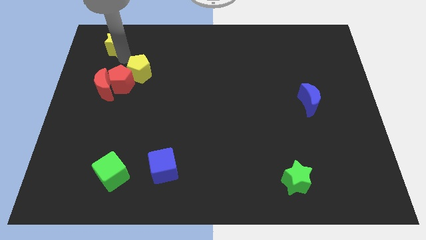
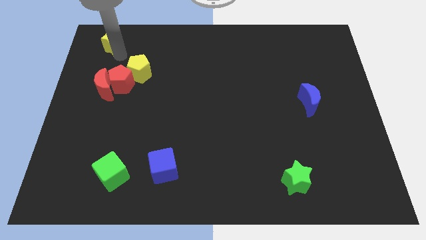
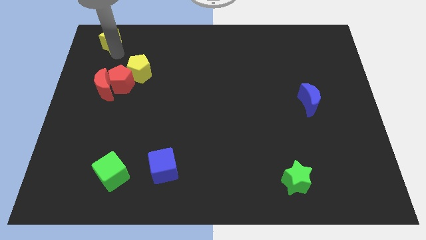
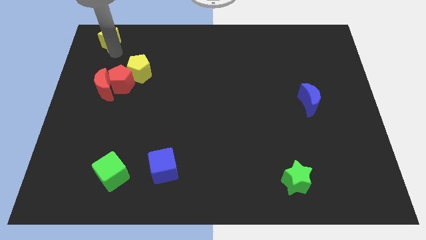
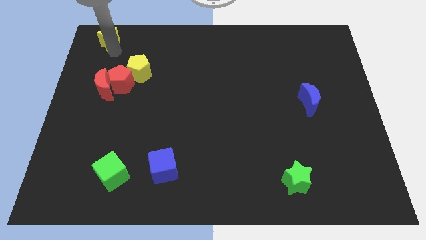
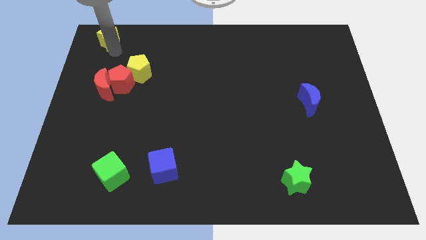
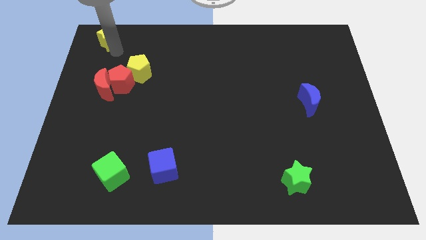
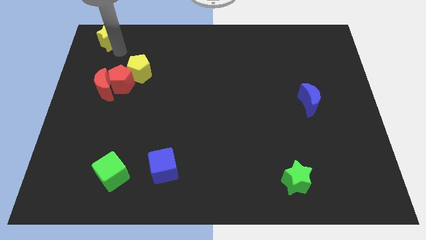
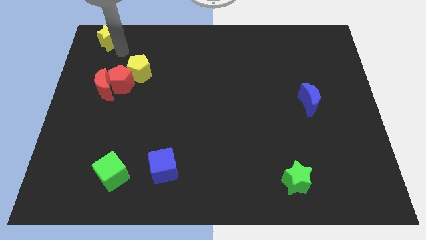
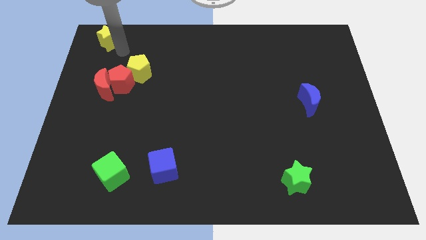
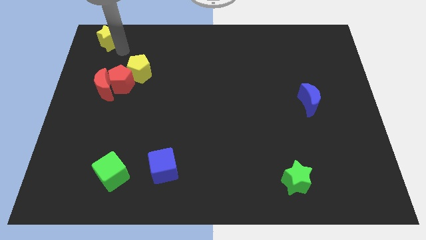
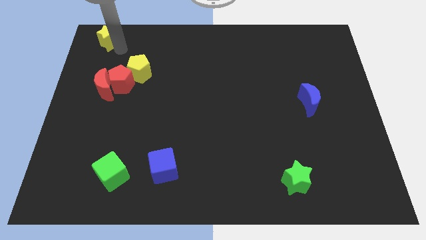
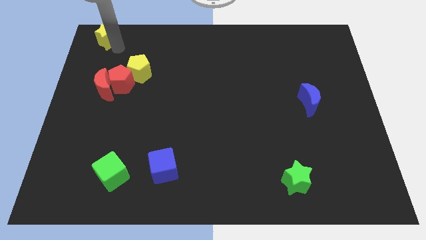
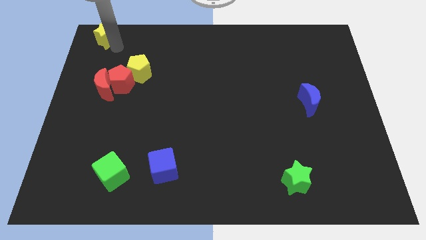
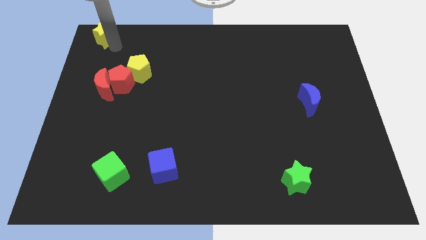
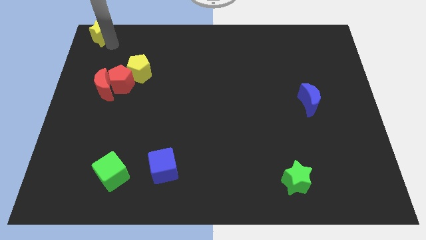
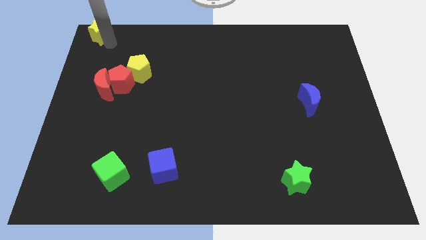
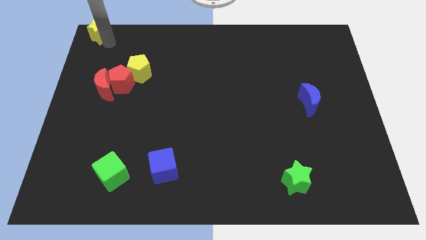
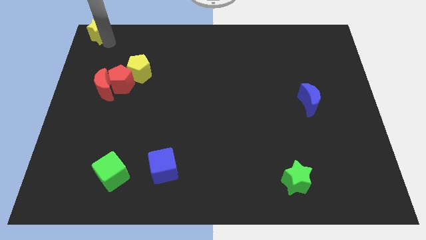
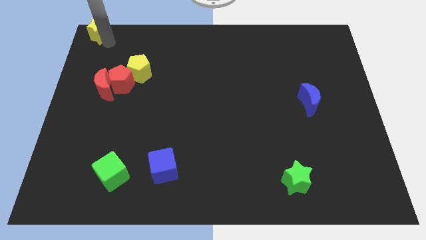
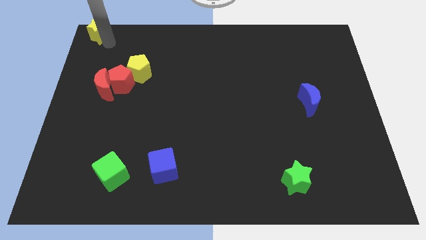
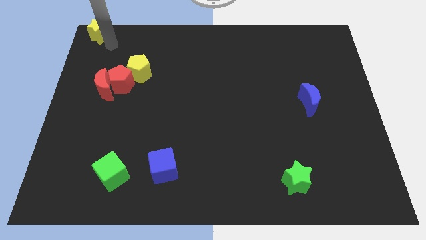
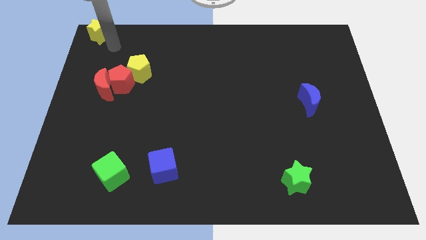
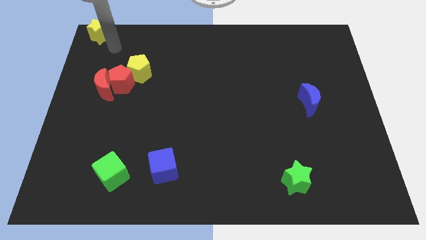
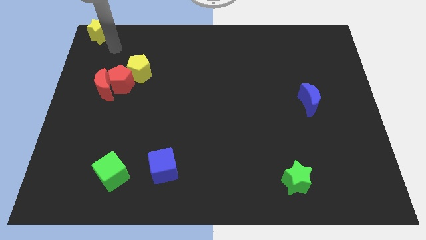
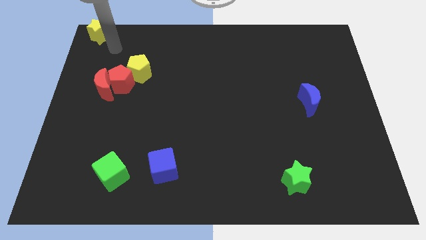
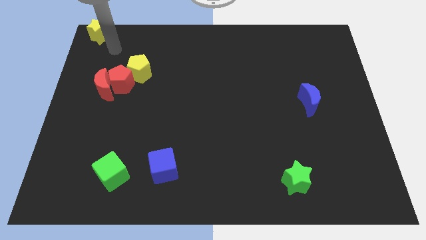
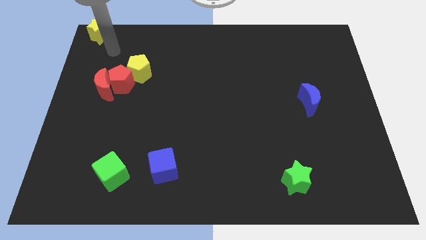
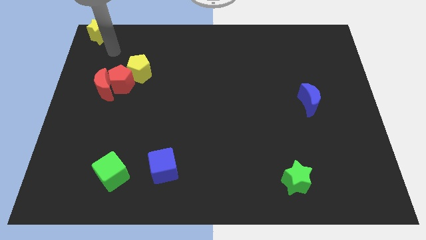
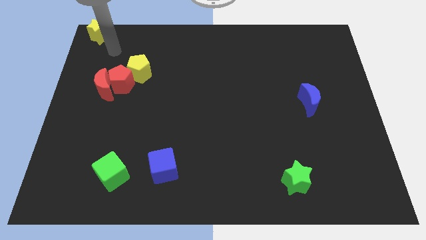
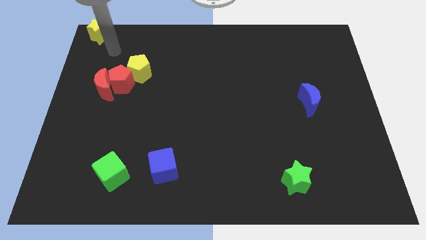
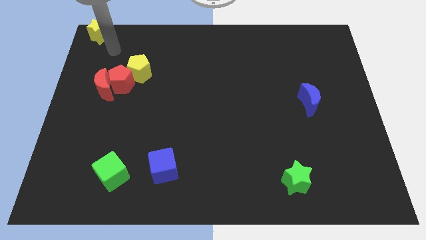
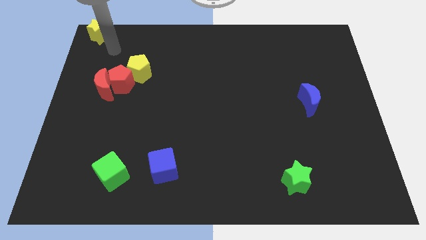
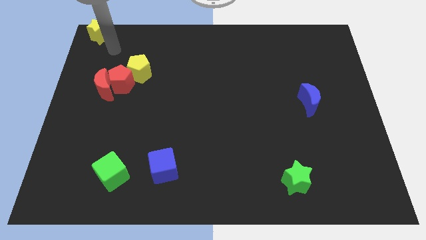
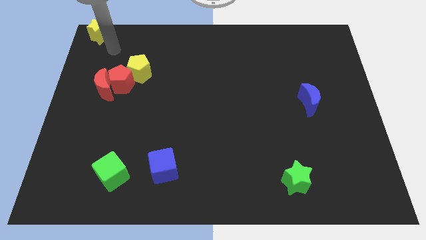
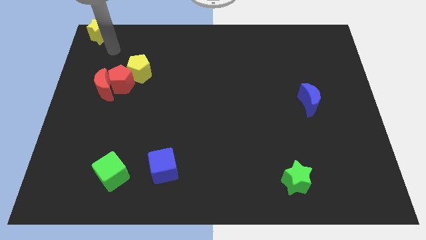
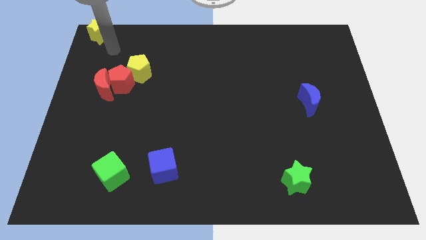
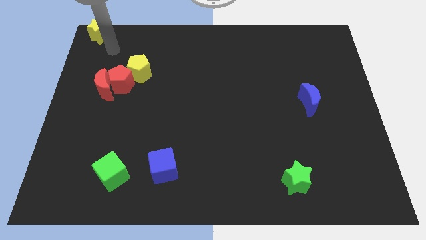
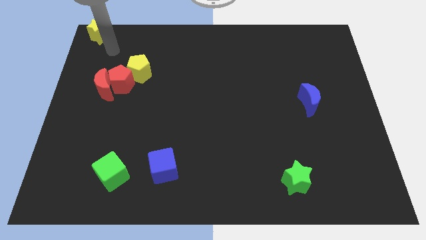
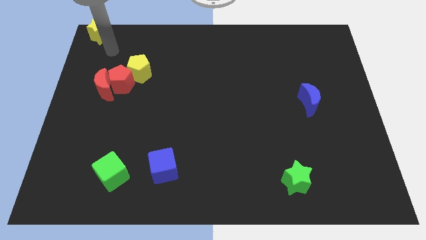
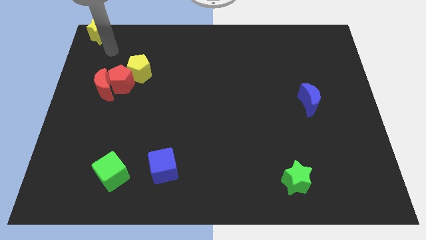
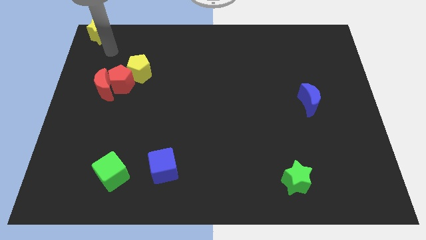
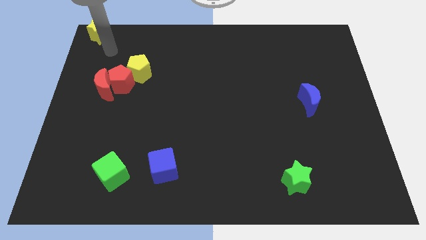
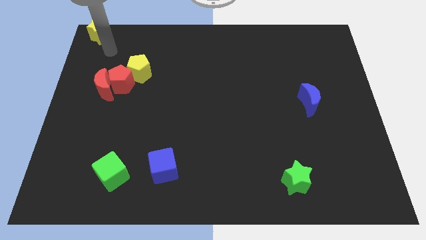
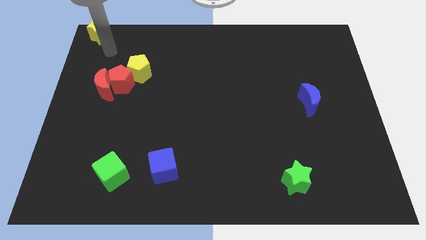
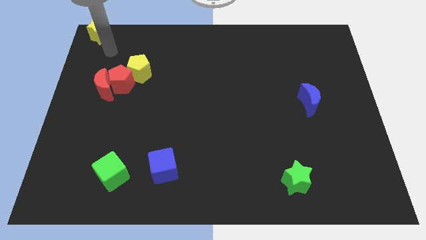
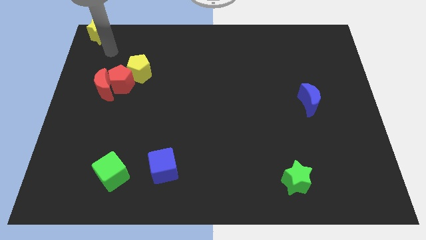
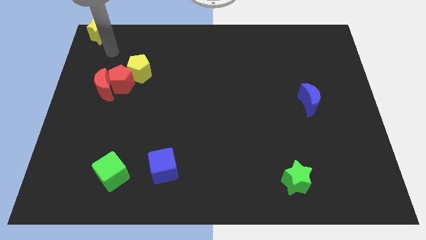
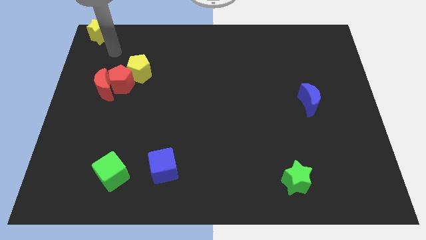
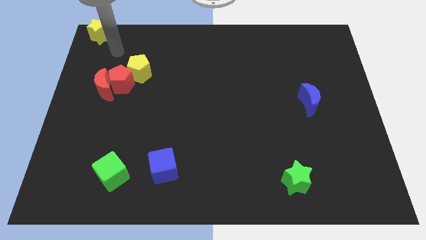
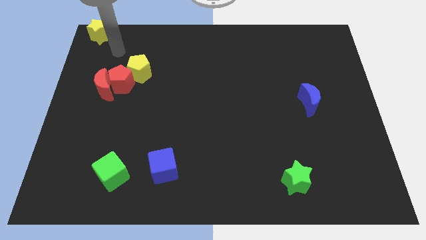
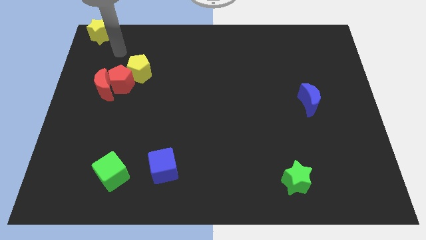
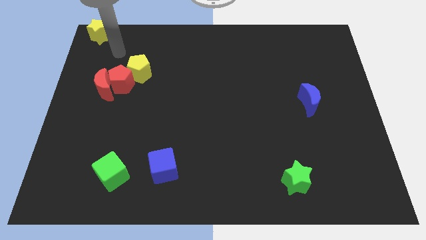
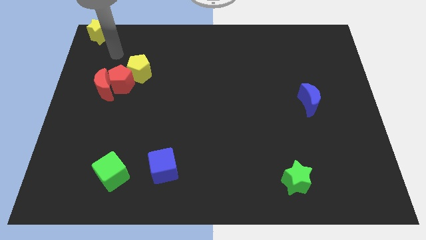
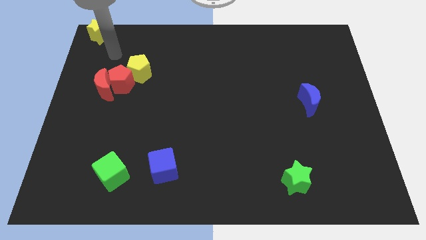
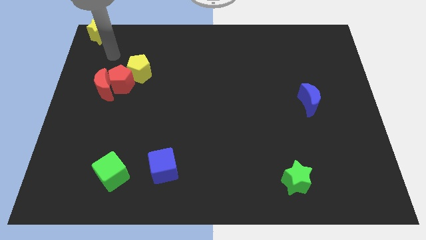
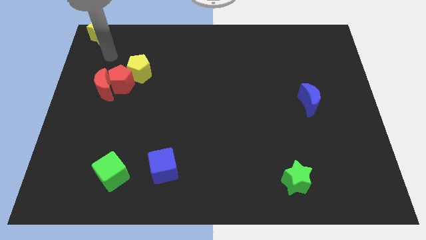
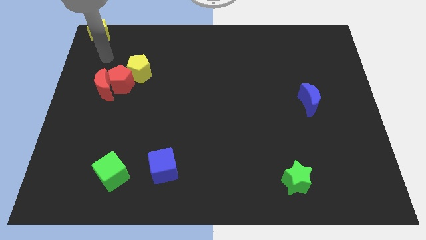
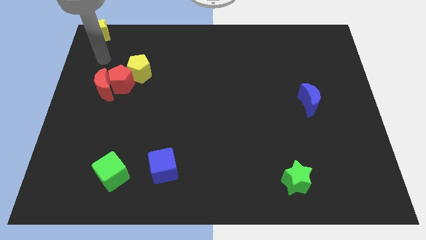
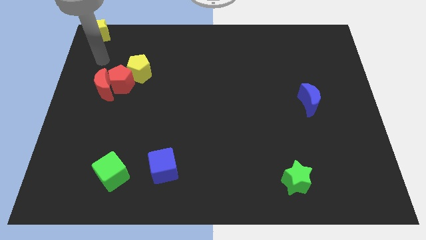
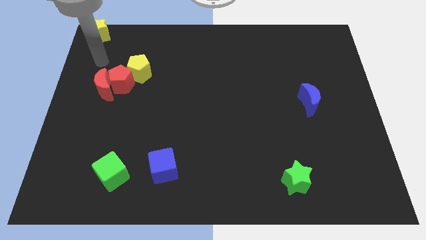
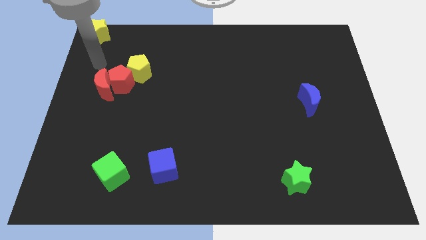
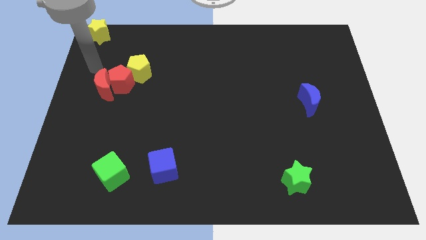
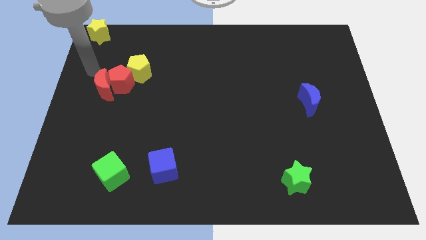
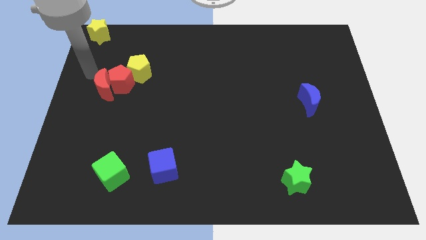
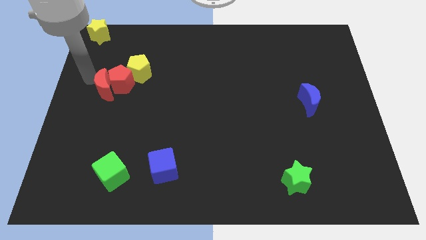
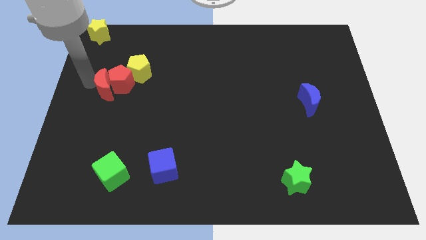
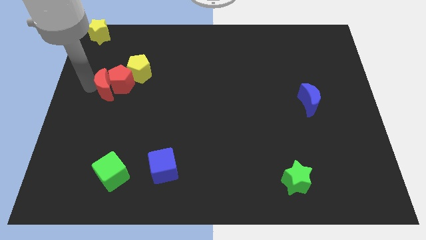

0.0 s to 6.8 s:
move the yellow star to the top left of the board

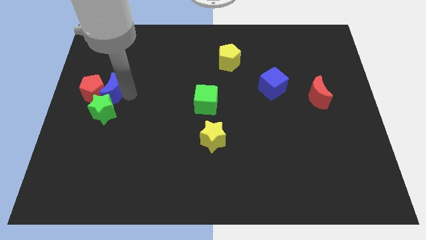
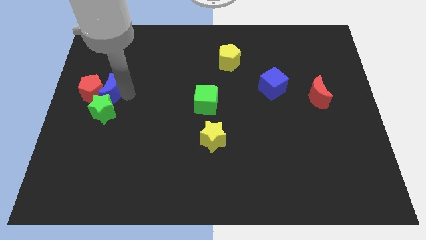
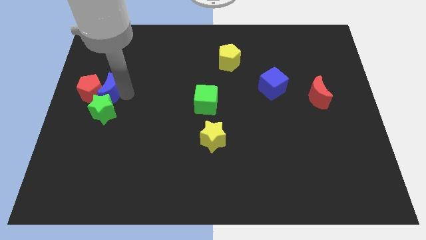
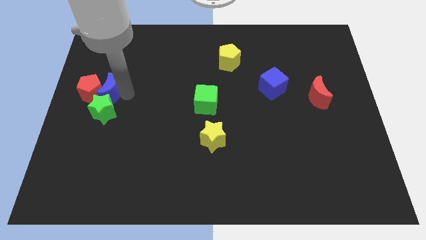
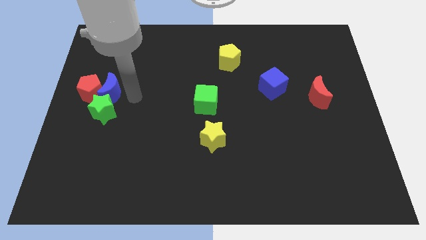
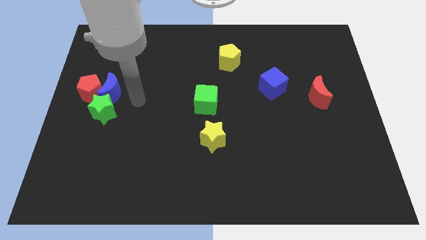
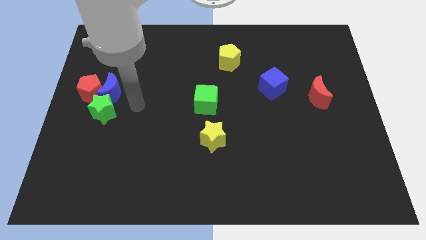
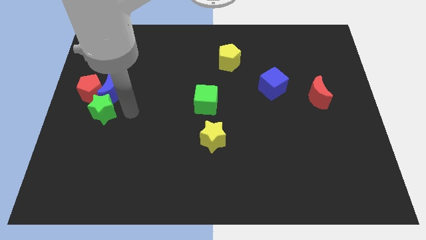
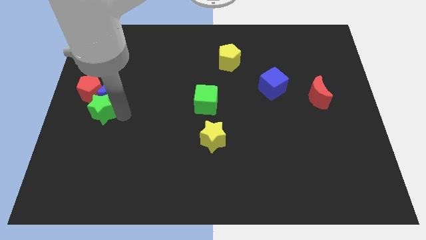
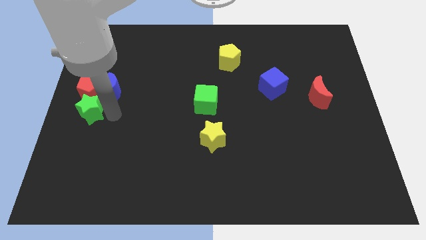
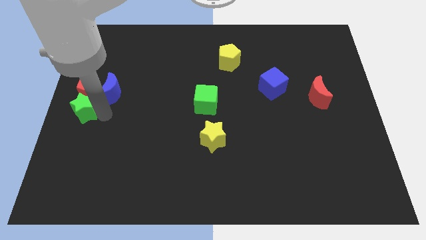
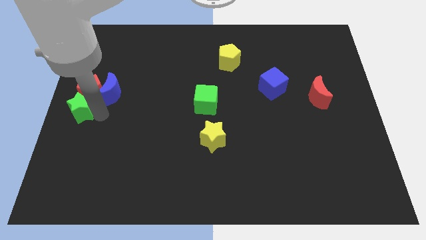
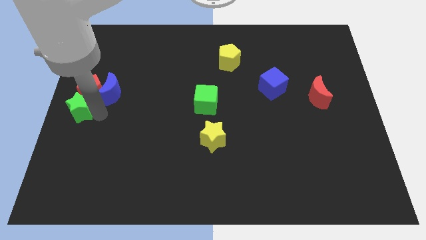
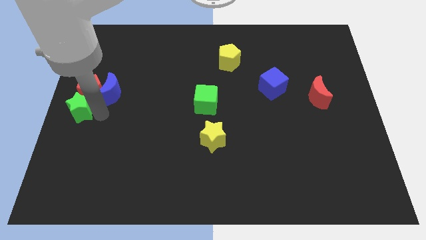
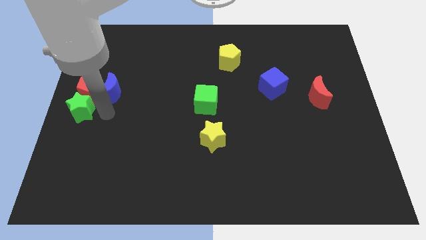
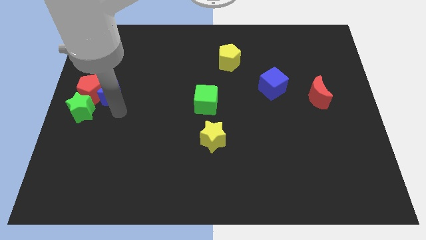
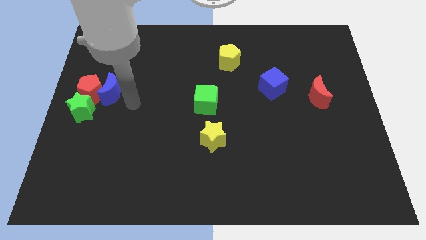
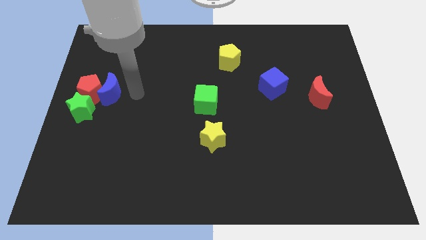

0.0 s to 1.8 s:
place the green star below the red pentagon

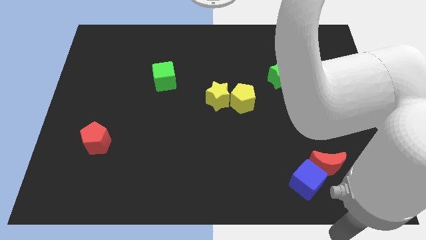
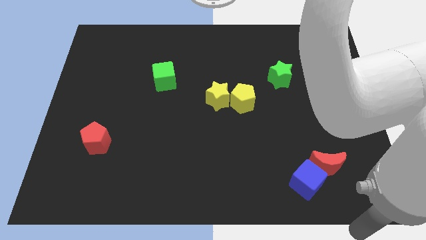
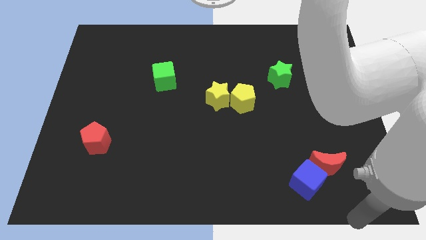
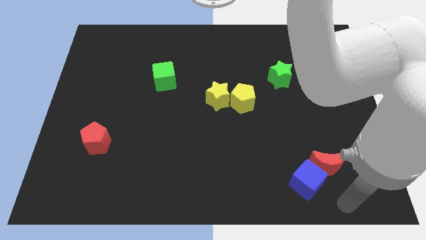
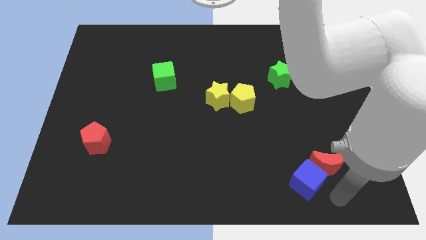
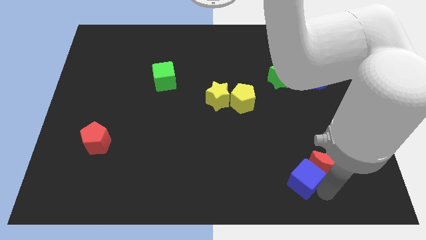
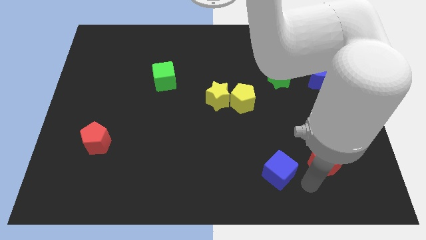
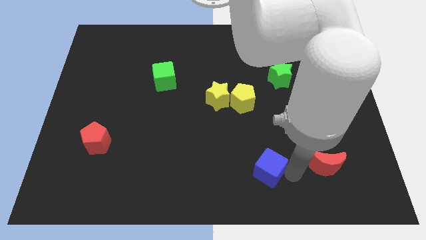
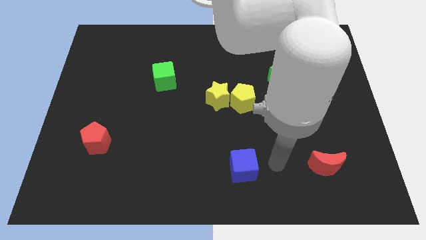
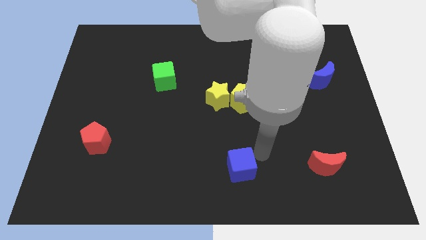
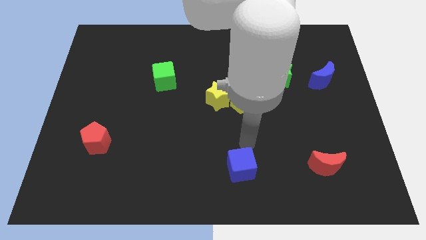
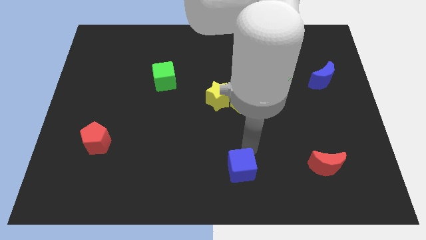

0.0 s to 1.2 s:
separate blue cube from the red moon
